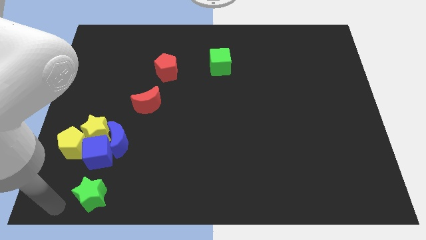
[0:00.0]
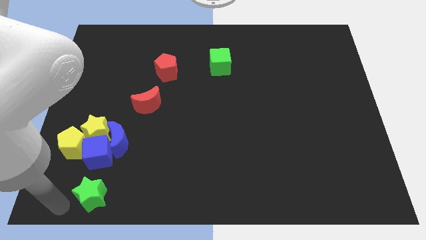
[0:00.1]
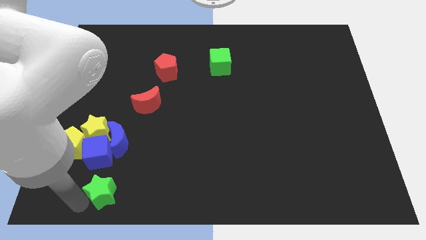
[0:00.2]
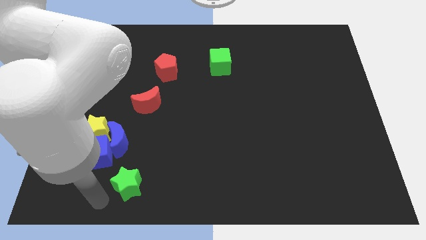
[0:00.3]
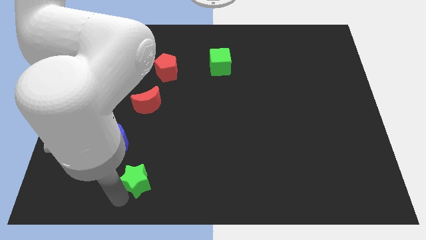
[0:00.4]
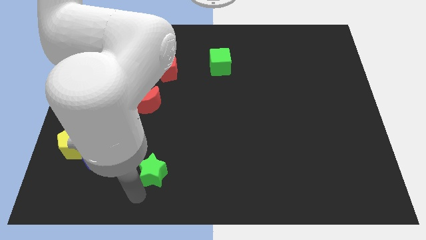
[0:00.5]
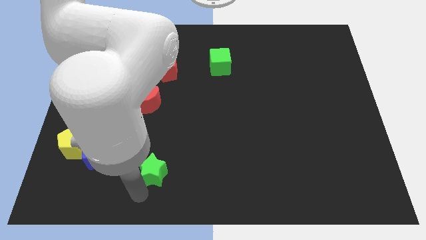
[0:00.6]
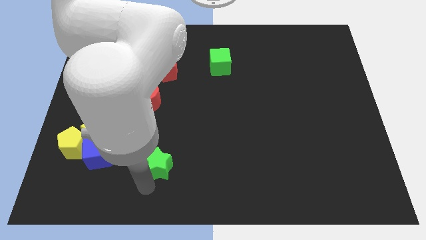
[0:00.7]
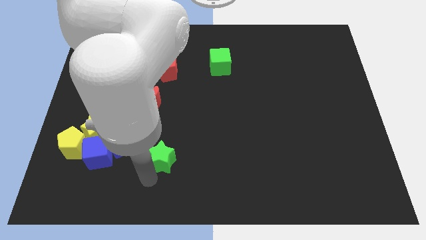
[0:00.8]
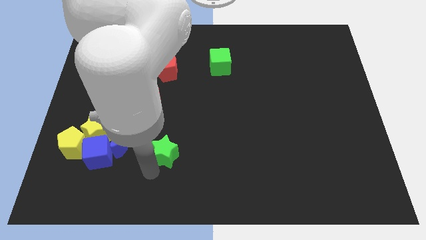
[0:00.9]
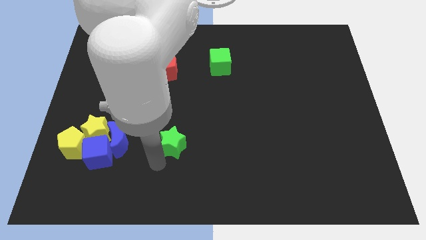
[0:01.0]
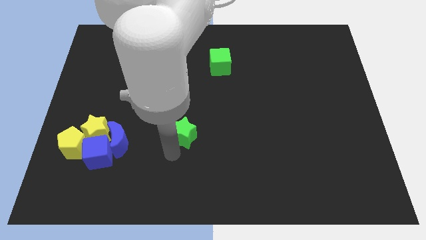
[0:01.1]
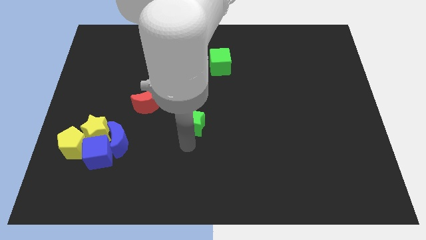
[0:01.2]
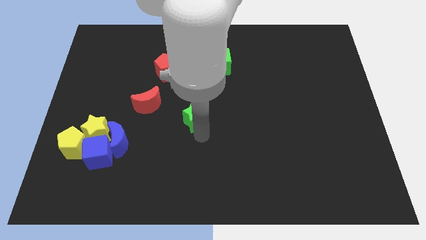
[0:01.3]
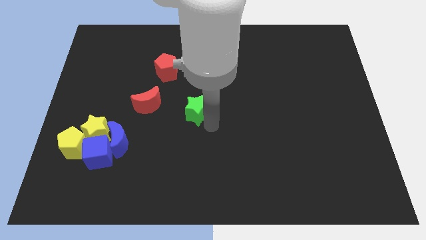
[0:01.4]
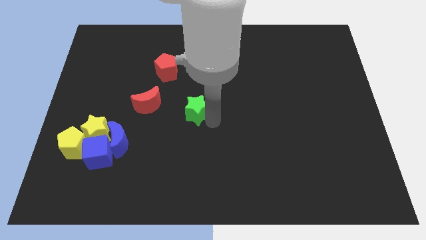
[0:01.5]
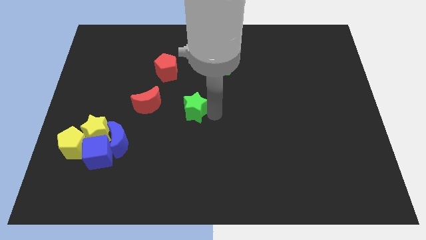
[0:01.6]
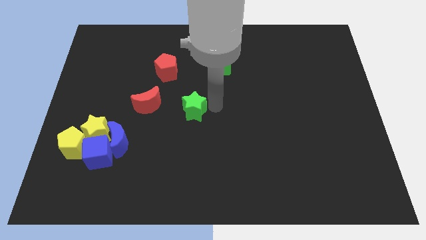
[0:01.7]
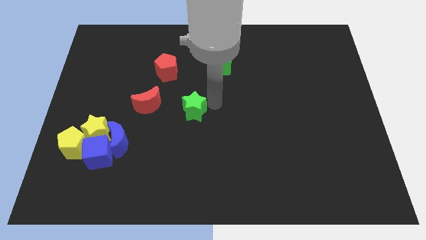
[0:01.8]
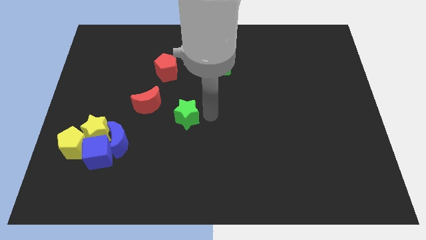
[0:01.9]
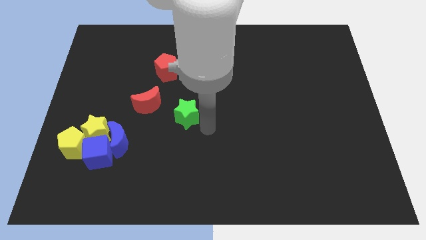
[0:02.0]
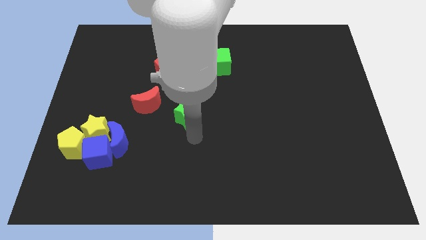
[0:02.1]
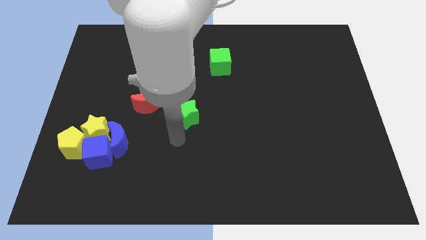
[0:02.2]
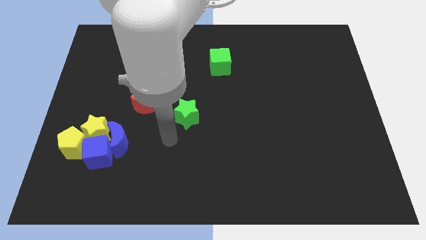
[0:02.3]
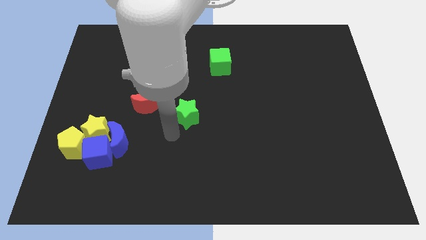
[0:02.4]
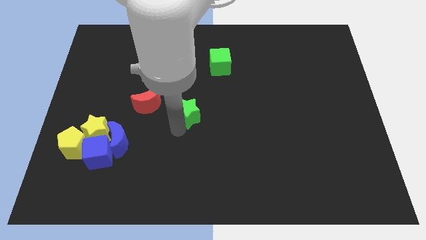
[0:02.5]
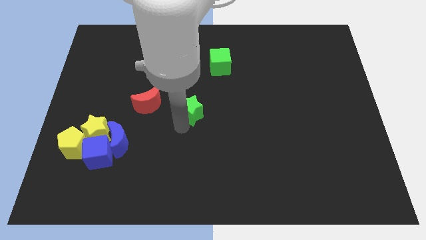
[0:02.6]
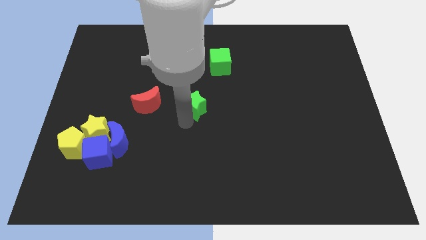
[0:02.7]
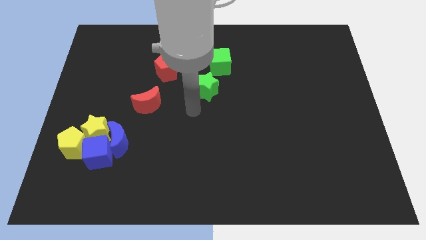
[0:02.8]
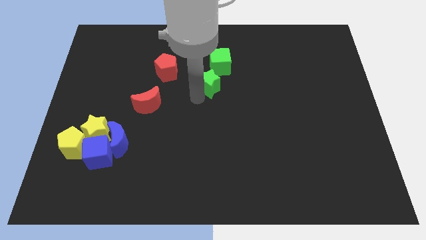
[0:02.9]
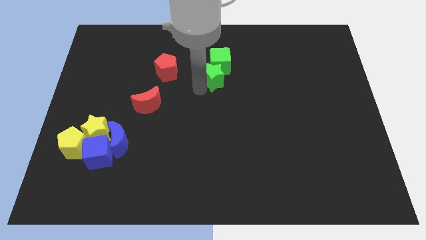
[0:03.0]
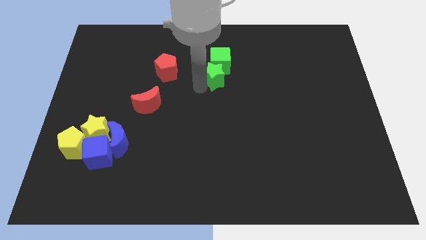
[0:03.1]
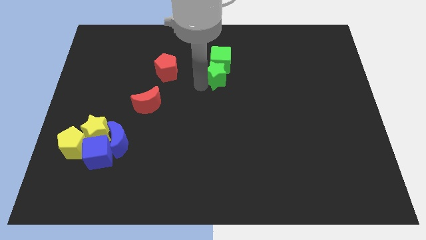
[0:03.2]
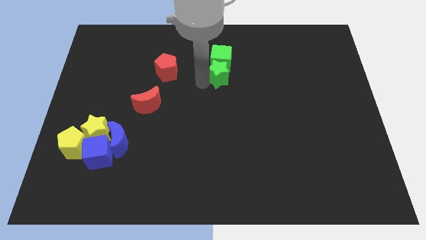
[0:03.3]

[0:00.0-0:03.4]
push green star to the bottom of green cube

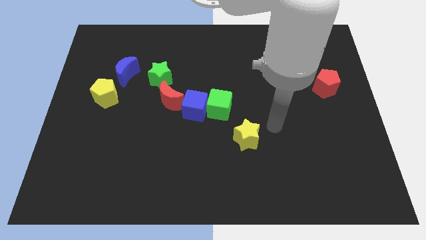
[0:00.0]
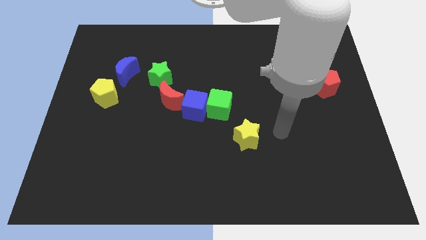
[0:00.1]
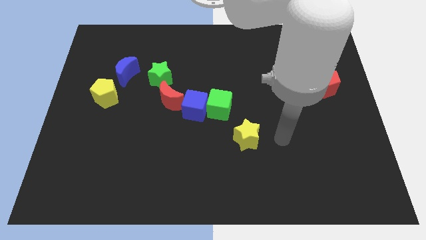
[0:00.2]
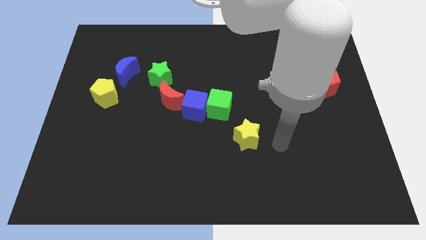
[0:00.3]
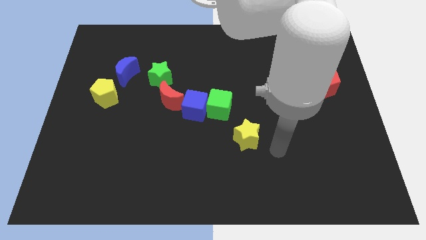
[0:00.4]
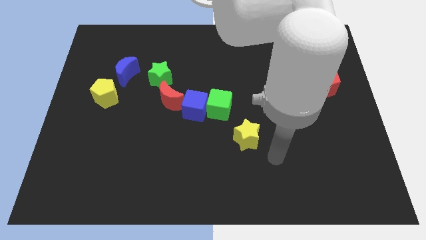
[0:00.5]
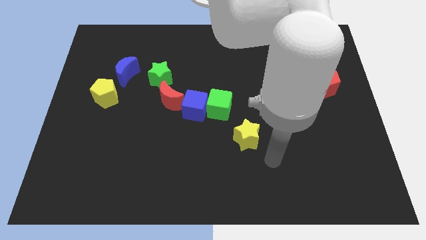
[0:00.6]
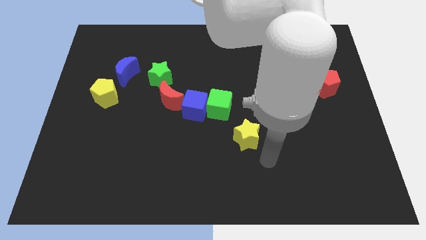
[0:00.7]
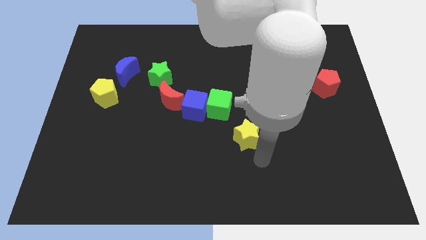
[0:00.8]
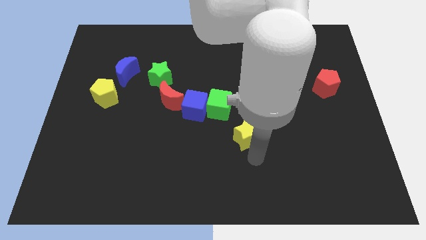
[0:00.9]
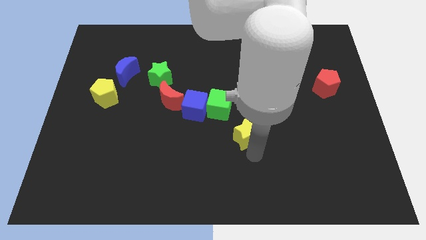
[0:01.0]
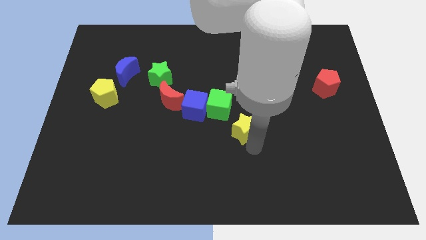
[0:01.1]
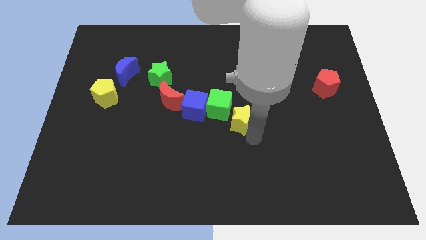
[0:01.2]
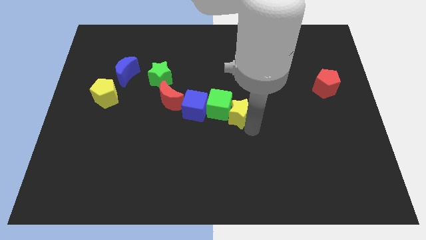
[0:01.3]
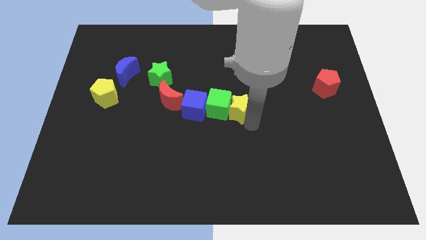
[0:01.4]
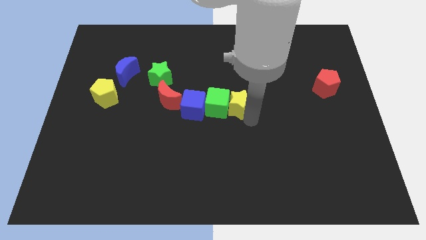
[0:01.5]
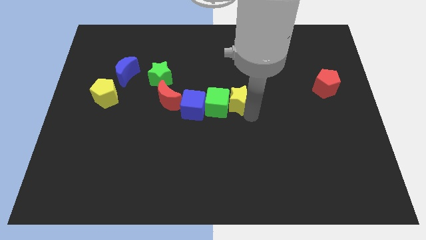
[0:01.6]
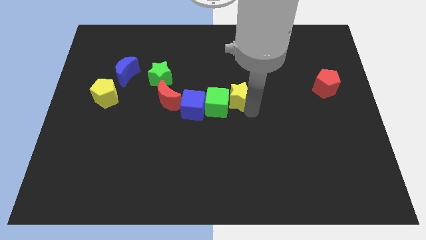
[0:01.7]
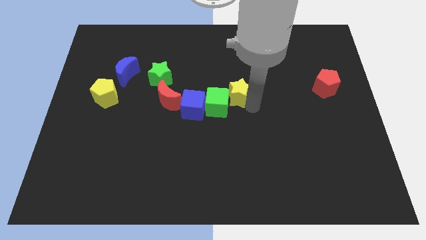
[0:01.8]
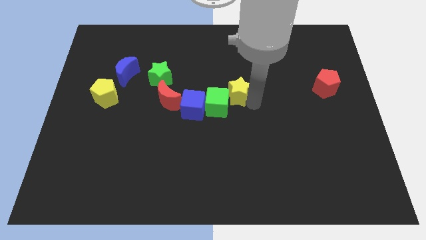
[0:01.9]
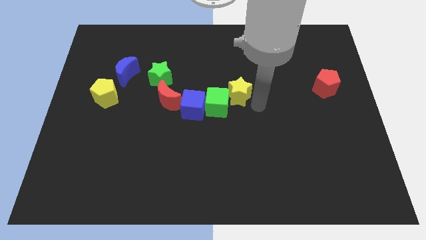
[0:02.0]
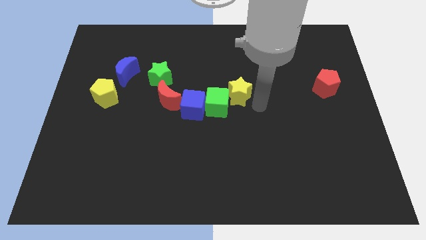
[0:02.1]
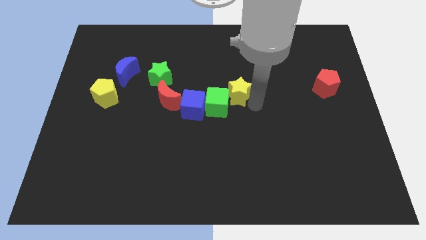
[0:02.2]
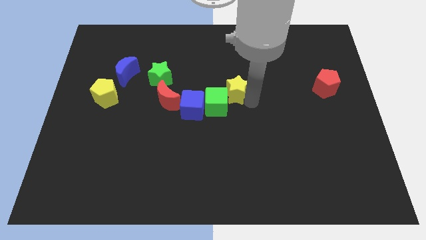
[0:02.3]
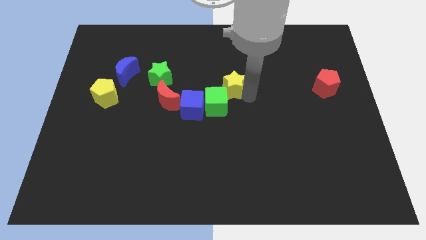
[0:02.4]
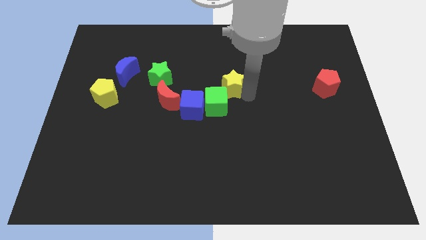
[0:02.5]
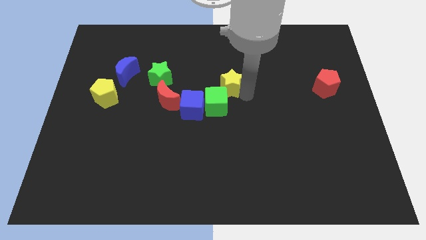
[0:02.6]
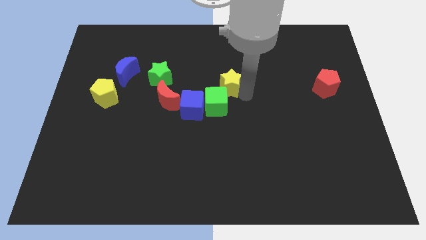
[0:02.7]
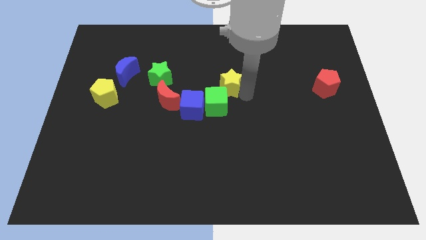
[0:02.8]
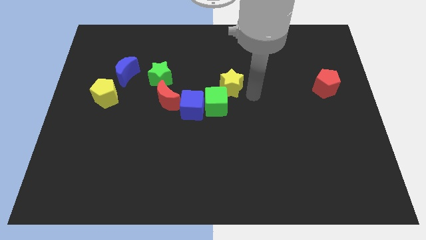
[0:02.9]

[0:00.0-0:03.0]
place the yellow star on top right of green cube

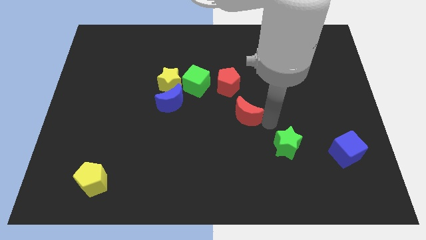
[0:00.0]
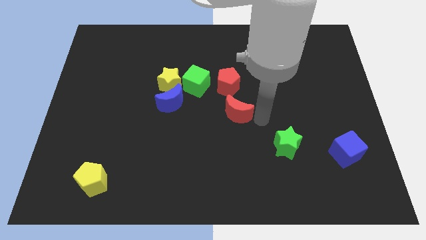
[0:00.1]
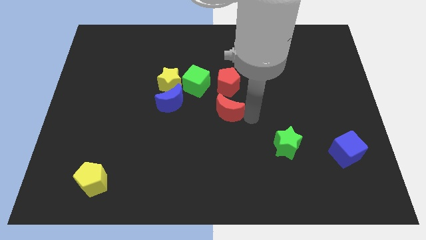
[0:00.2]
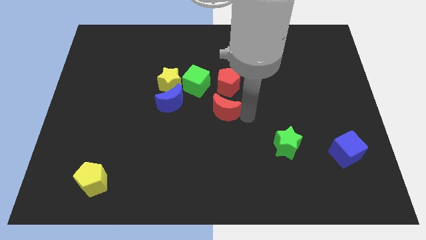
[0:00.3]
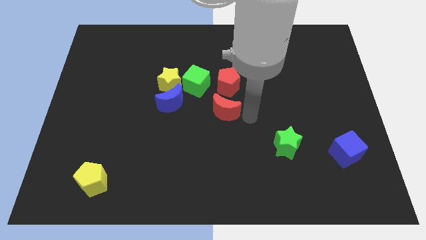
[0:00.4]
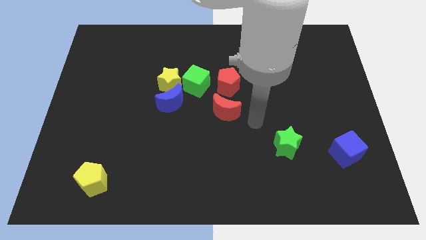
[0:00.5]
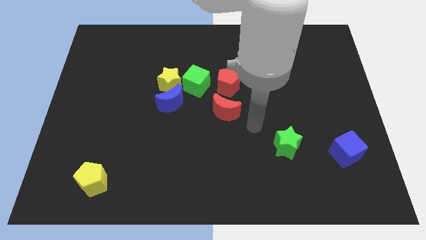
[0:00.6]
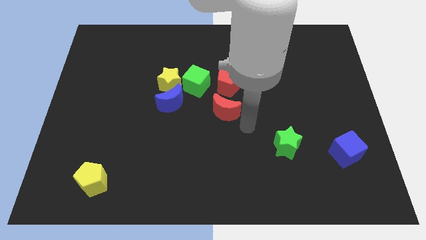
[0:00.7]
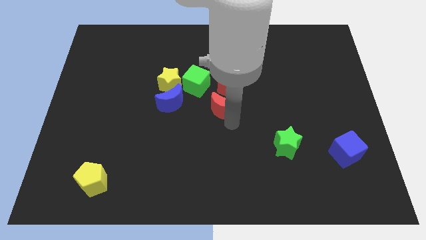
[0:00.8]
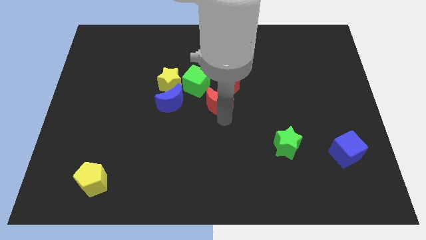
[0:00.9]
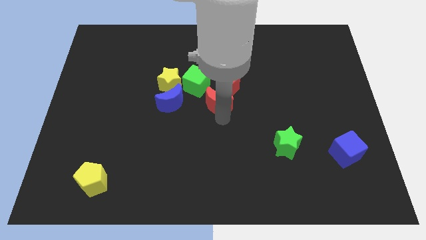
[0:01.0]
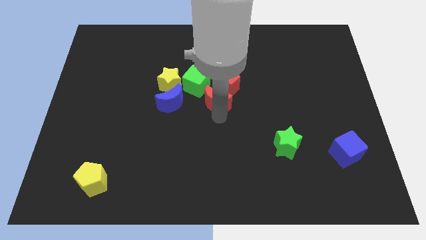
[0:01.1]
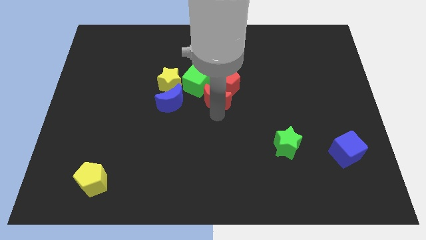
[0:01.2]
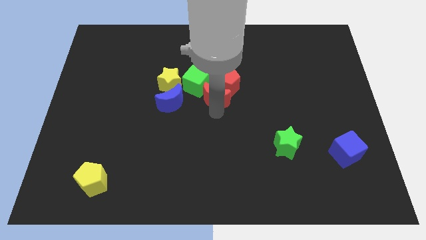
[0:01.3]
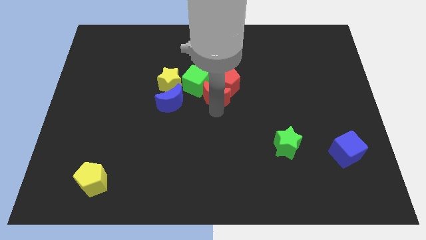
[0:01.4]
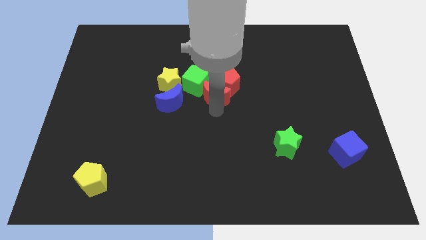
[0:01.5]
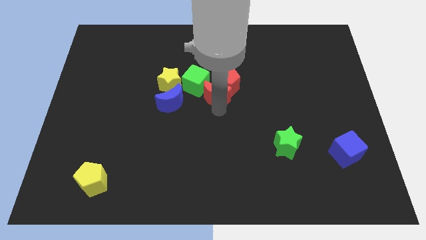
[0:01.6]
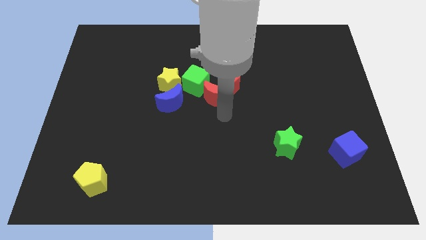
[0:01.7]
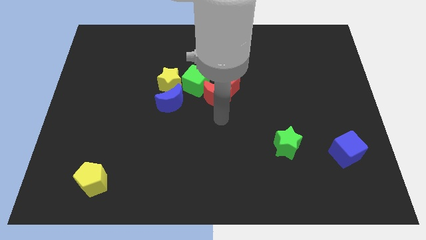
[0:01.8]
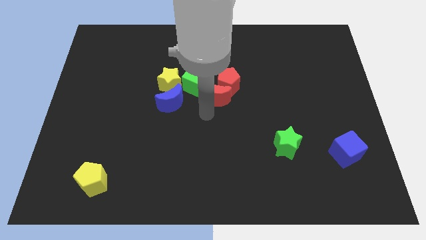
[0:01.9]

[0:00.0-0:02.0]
move the red crescent below the red pentagon

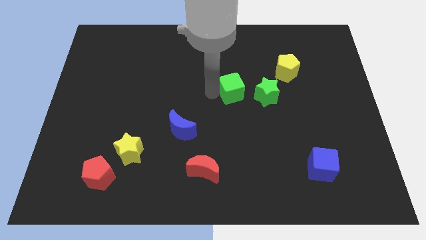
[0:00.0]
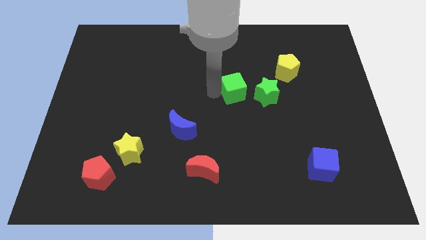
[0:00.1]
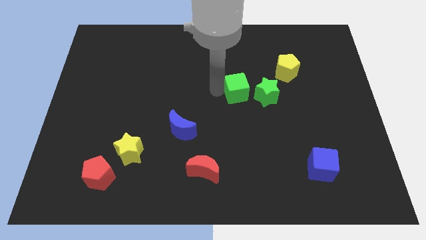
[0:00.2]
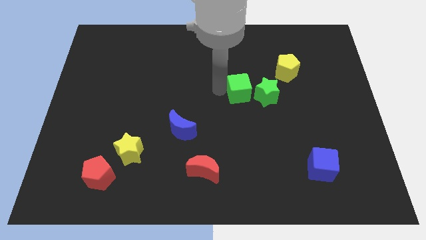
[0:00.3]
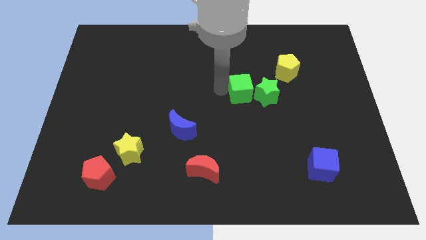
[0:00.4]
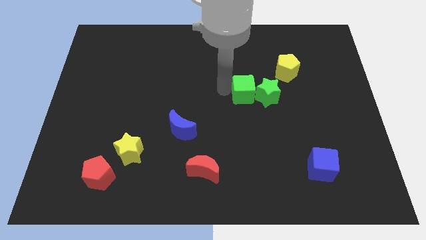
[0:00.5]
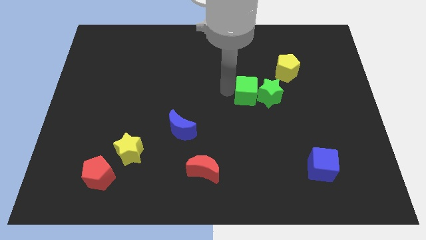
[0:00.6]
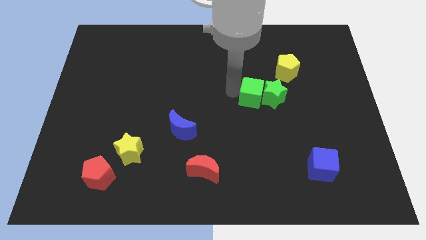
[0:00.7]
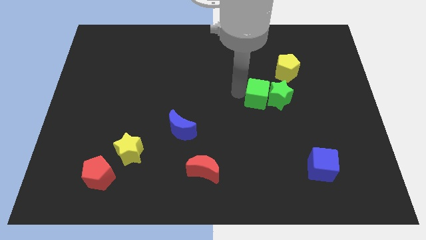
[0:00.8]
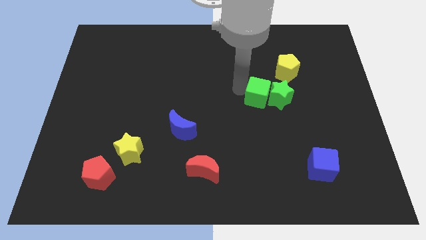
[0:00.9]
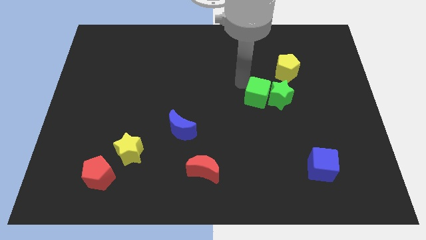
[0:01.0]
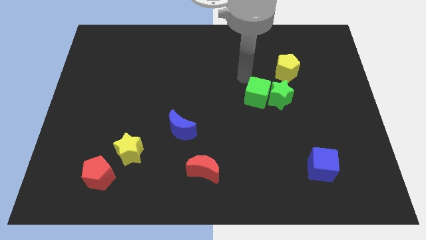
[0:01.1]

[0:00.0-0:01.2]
push green cube in to green star
